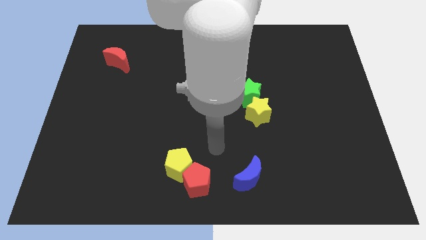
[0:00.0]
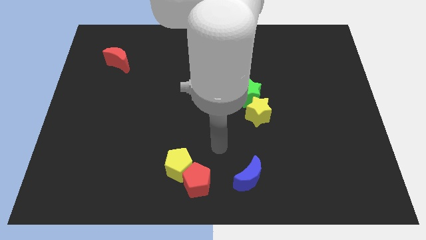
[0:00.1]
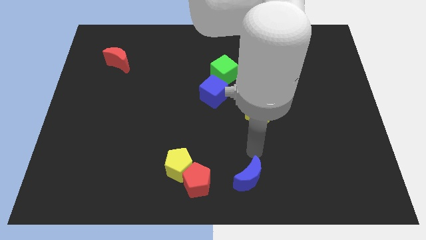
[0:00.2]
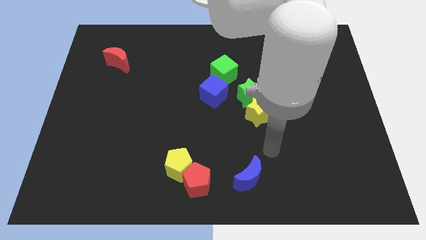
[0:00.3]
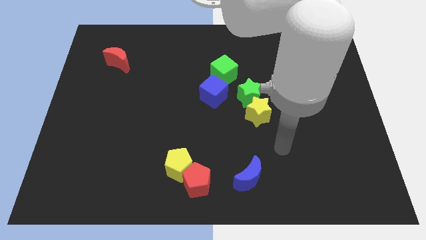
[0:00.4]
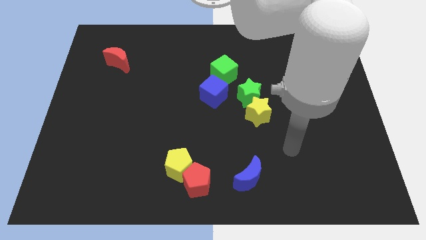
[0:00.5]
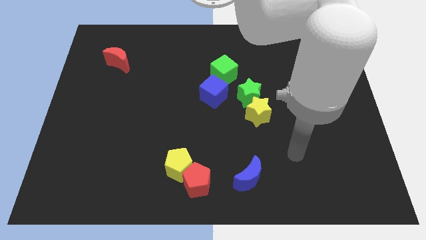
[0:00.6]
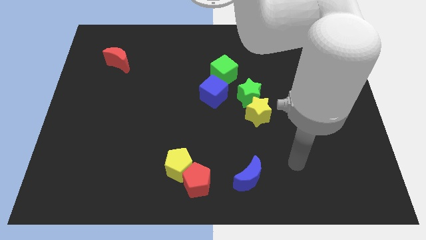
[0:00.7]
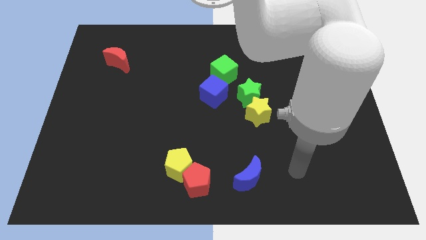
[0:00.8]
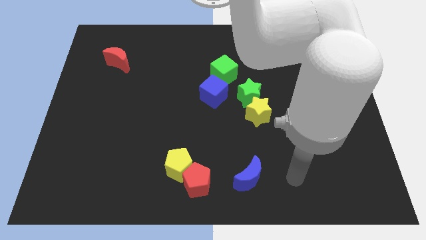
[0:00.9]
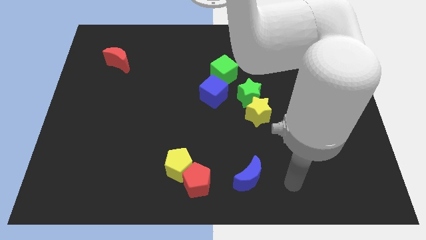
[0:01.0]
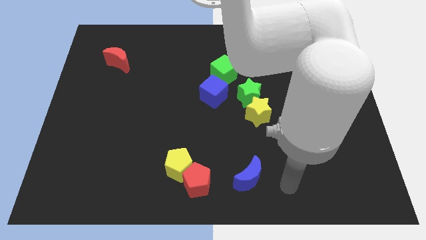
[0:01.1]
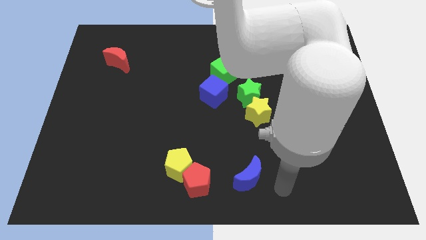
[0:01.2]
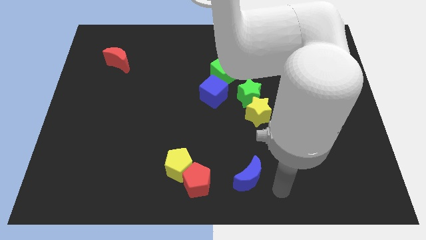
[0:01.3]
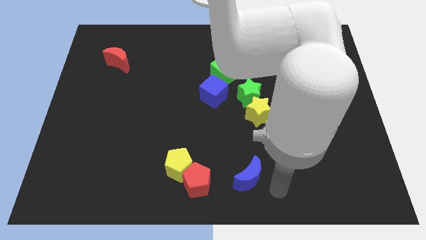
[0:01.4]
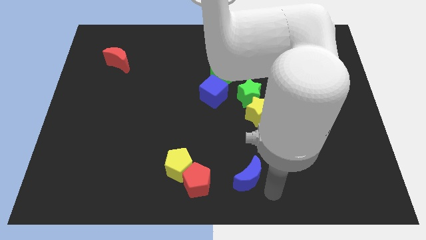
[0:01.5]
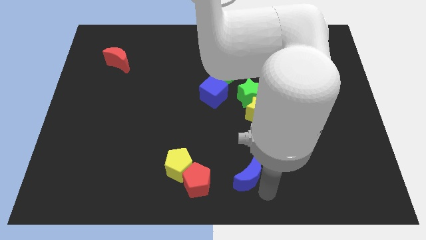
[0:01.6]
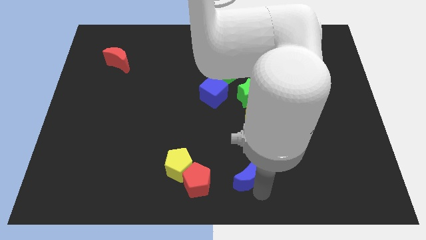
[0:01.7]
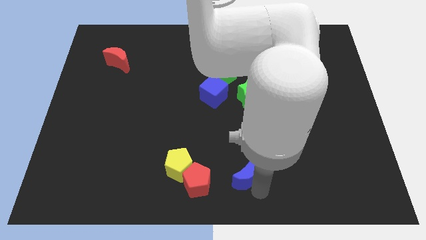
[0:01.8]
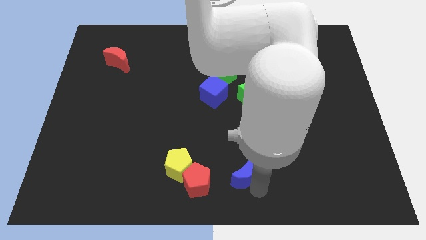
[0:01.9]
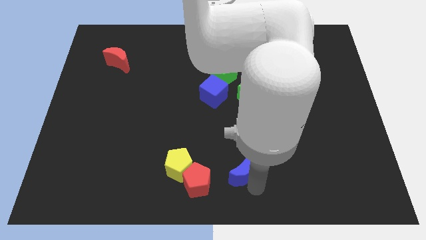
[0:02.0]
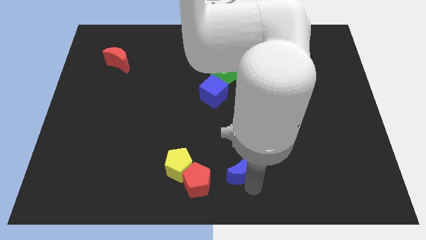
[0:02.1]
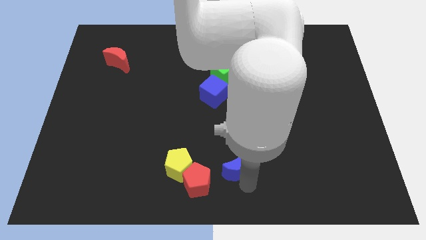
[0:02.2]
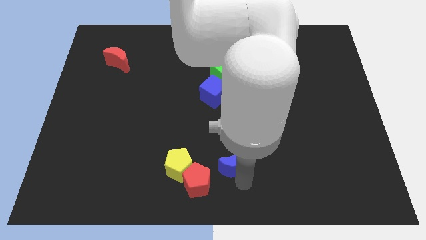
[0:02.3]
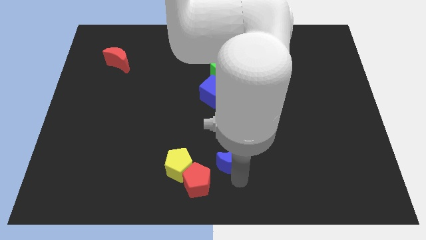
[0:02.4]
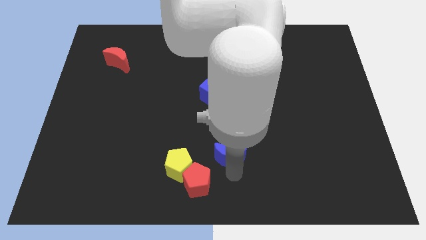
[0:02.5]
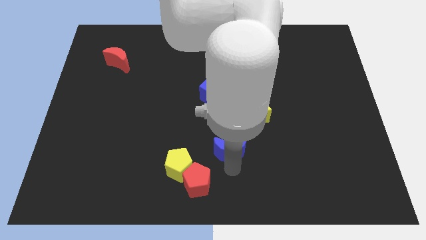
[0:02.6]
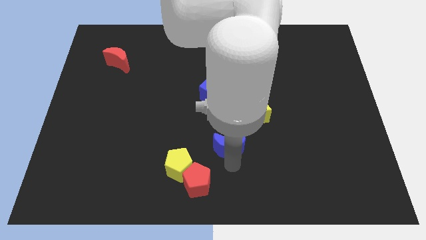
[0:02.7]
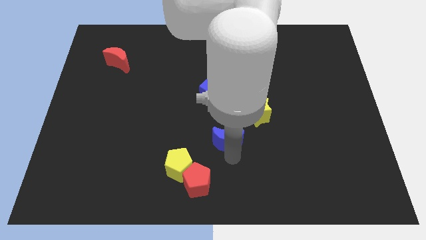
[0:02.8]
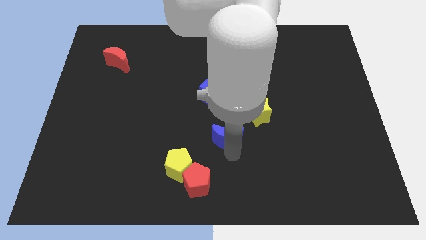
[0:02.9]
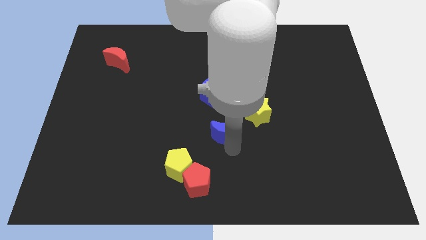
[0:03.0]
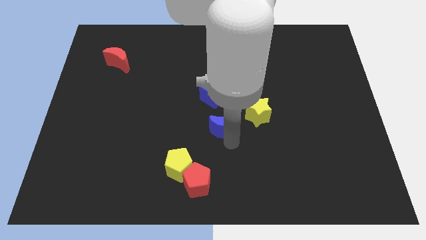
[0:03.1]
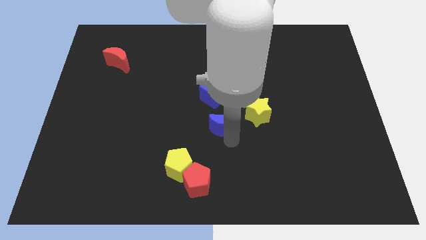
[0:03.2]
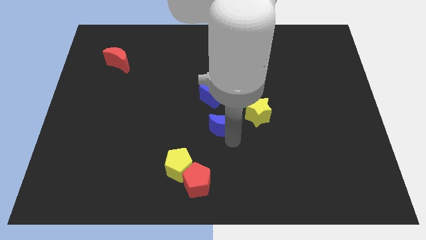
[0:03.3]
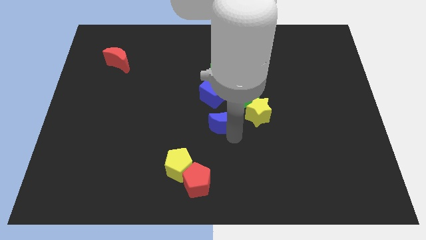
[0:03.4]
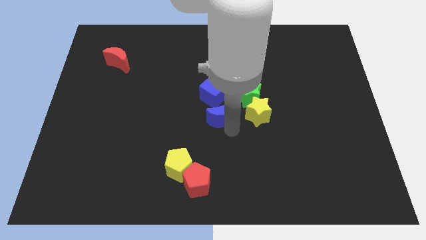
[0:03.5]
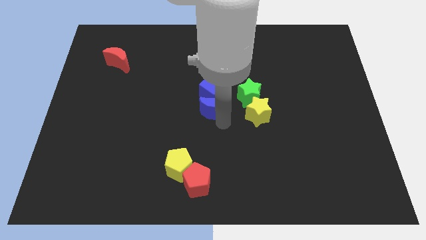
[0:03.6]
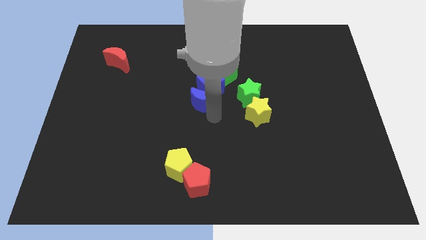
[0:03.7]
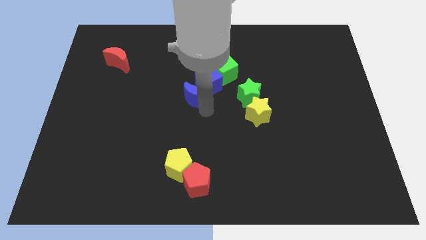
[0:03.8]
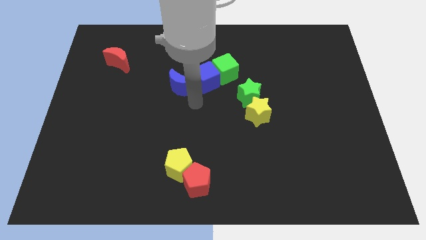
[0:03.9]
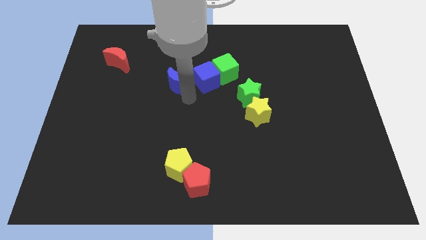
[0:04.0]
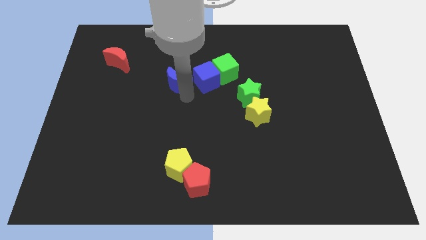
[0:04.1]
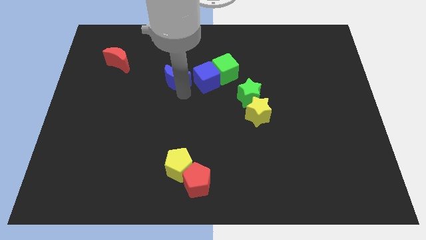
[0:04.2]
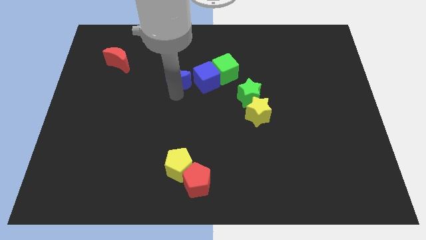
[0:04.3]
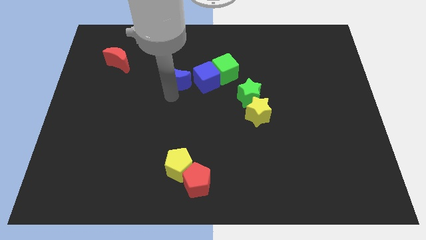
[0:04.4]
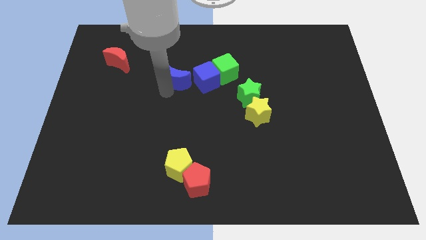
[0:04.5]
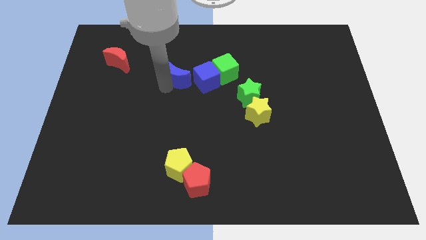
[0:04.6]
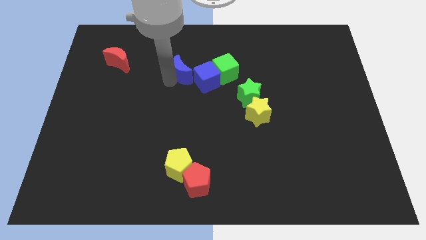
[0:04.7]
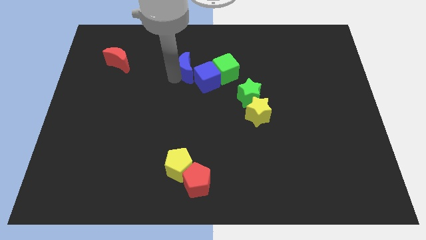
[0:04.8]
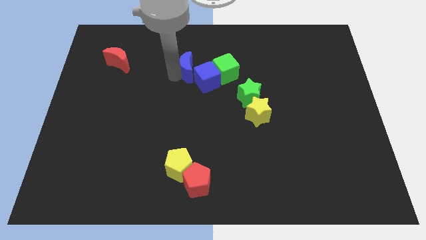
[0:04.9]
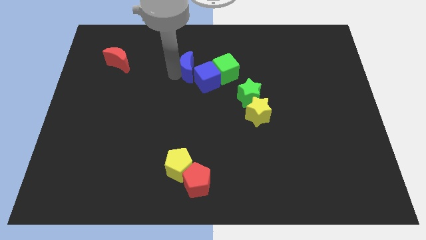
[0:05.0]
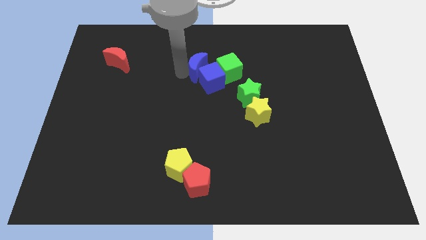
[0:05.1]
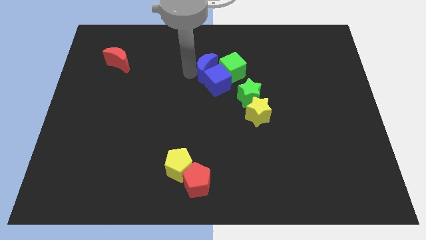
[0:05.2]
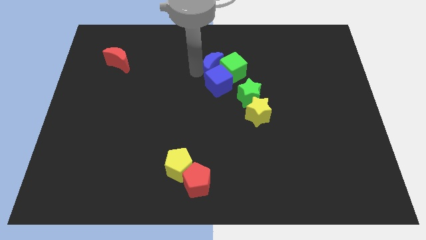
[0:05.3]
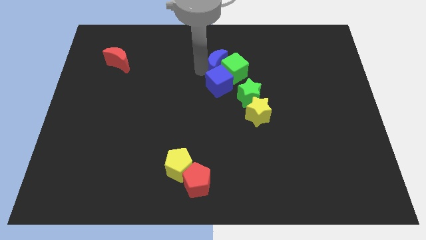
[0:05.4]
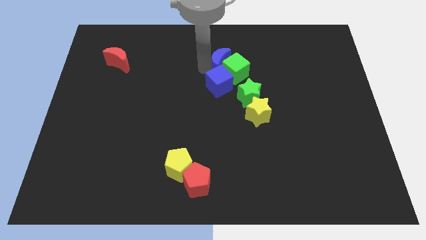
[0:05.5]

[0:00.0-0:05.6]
put the blue moon close to the green cube

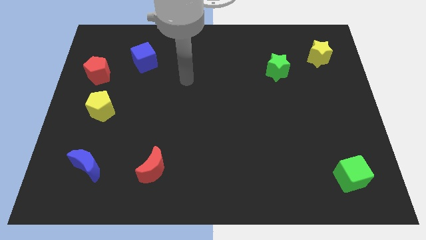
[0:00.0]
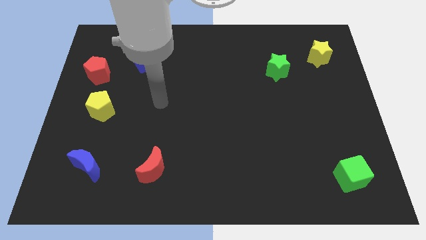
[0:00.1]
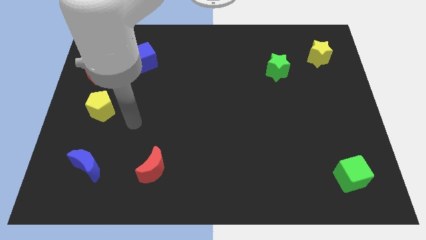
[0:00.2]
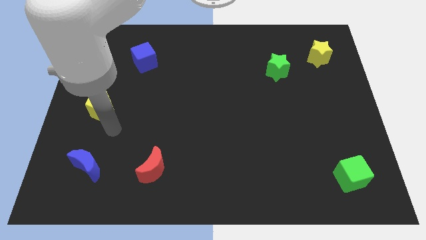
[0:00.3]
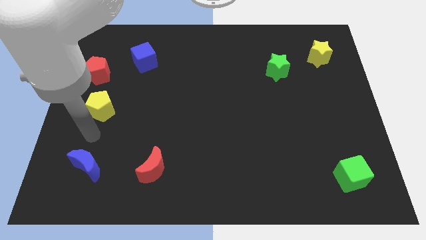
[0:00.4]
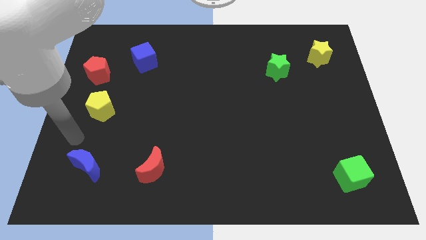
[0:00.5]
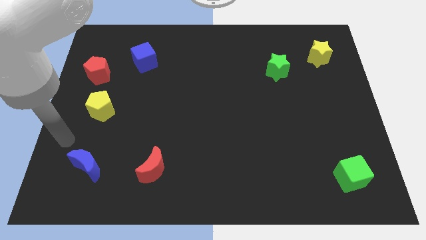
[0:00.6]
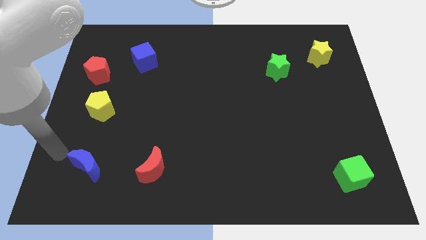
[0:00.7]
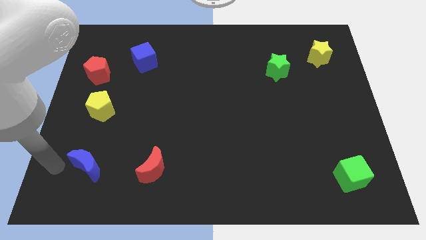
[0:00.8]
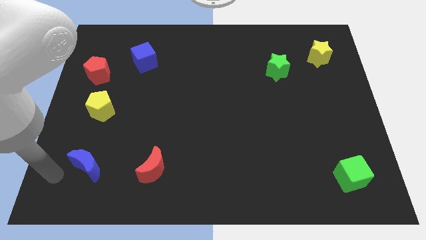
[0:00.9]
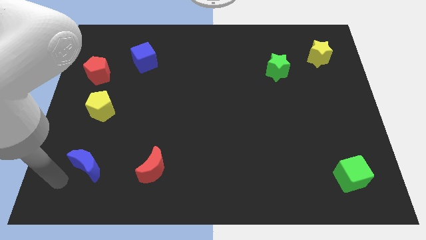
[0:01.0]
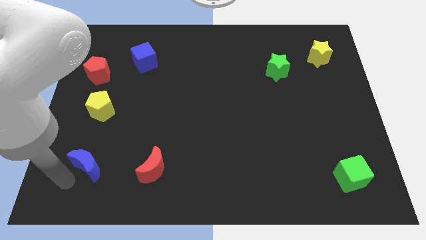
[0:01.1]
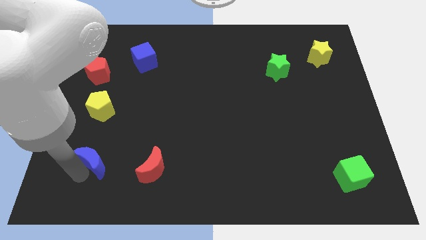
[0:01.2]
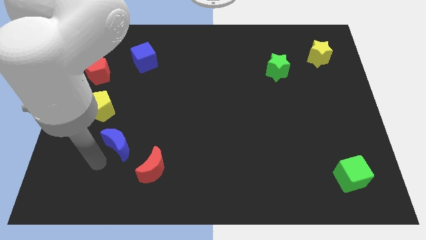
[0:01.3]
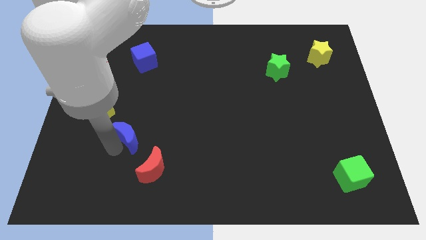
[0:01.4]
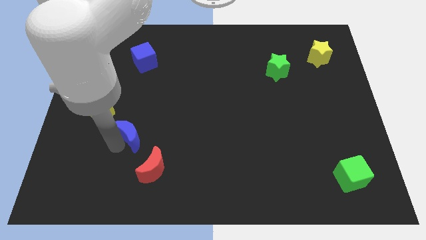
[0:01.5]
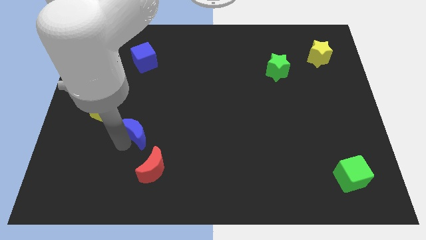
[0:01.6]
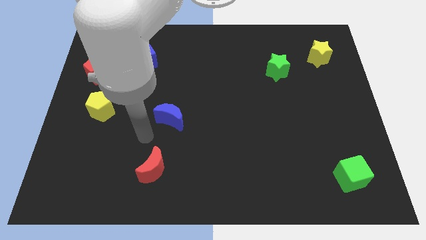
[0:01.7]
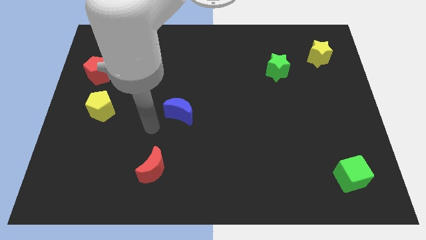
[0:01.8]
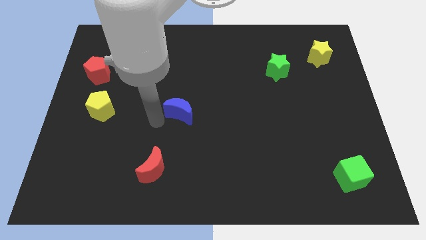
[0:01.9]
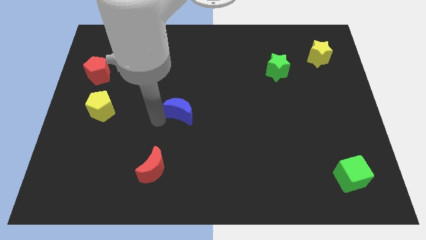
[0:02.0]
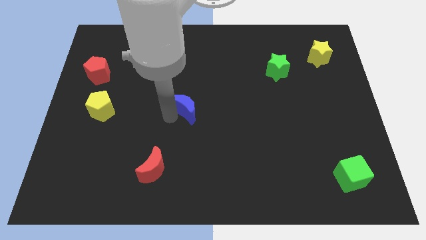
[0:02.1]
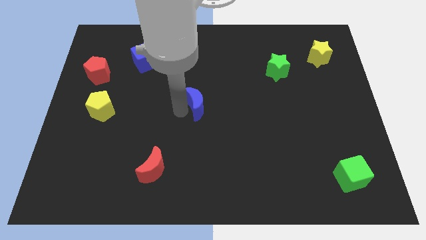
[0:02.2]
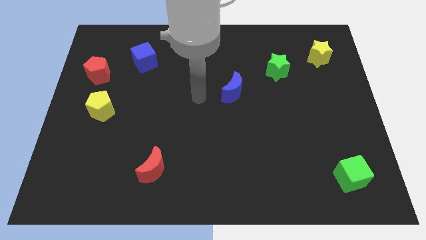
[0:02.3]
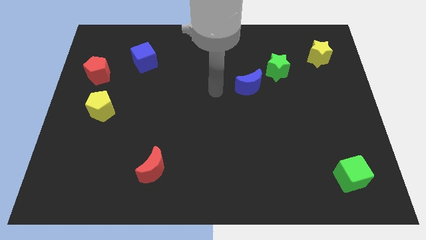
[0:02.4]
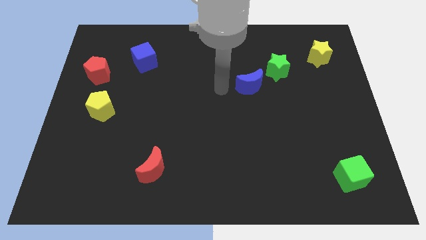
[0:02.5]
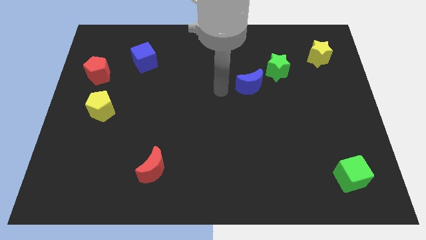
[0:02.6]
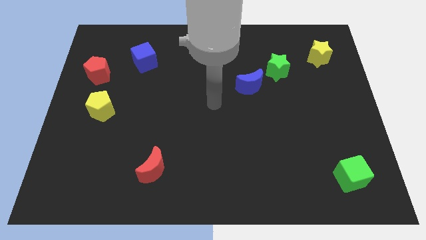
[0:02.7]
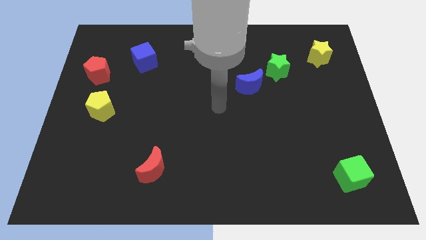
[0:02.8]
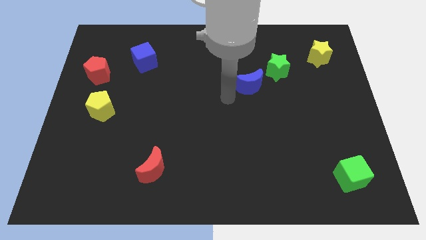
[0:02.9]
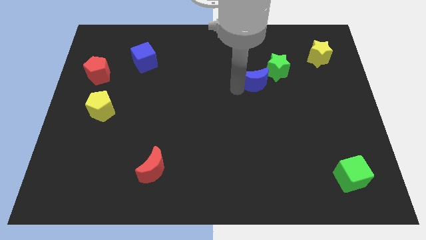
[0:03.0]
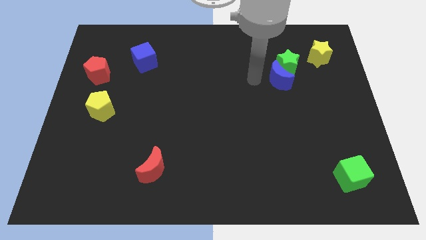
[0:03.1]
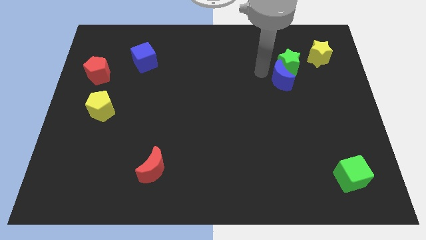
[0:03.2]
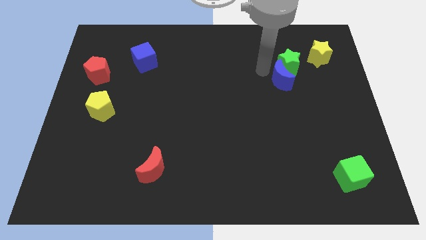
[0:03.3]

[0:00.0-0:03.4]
slide the blue moon towards the green star
